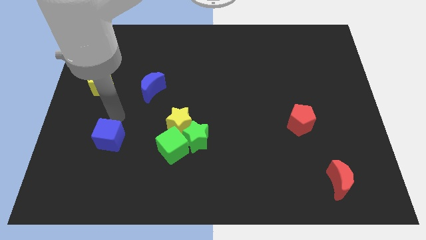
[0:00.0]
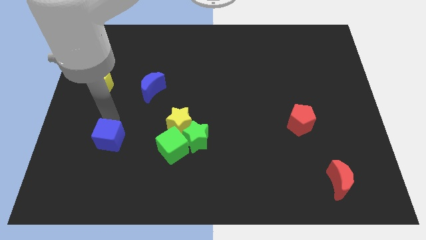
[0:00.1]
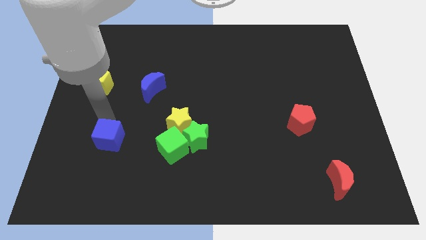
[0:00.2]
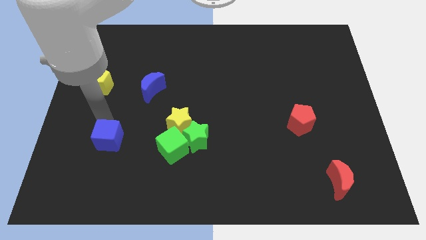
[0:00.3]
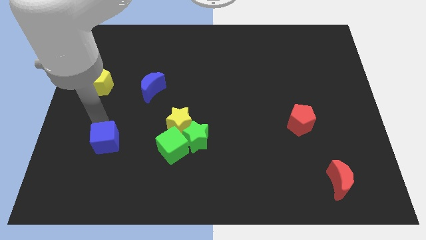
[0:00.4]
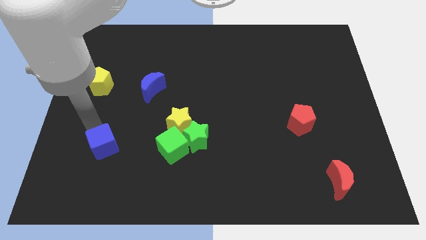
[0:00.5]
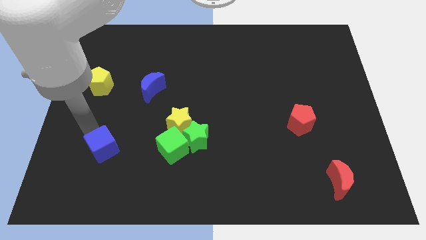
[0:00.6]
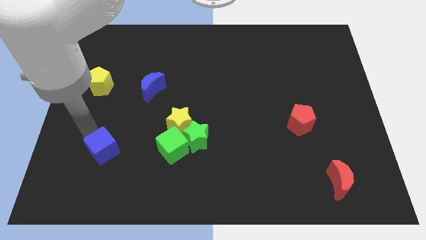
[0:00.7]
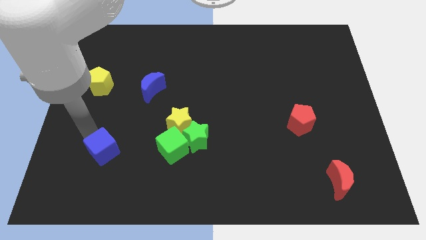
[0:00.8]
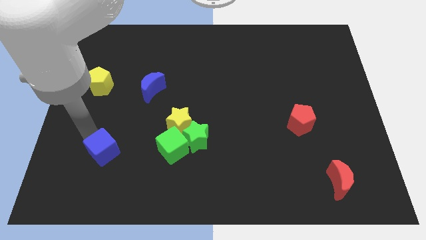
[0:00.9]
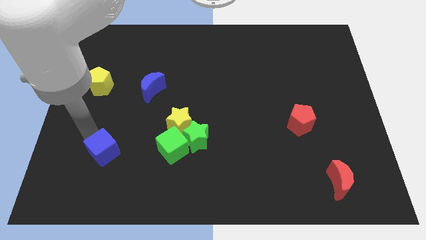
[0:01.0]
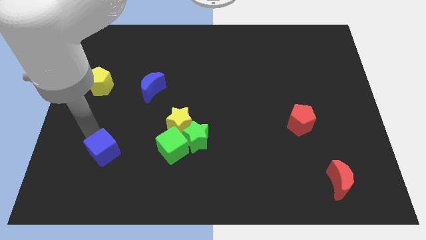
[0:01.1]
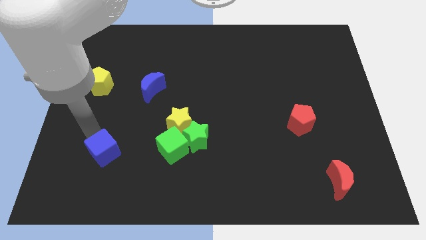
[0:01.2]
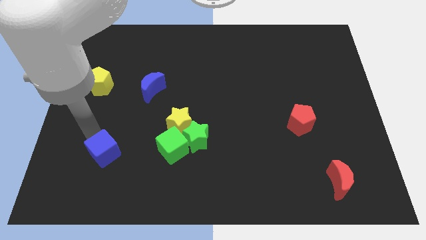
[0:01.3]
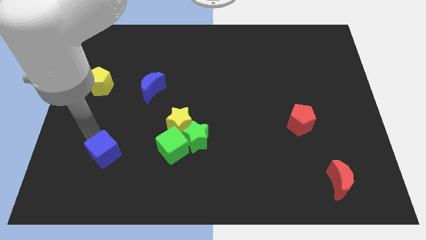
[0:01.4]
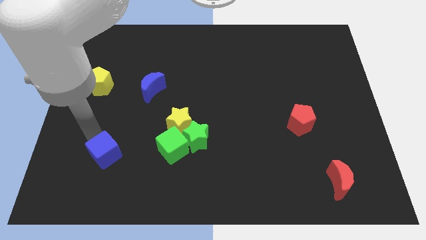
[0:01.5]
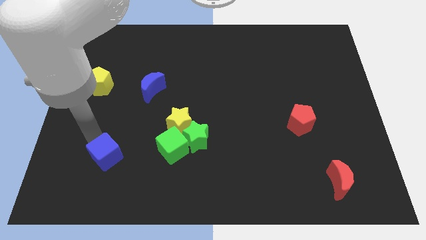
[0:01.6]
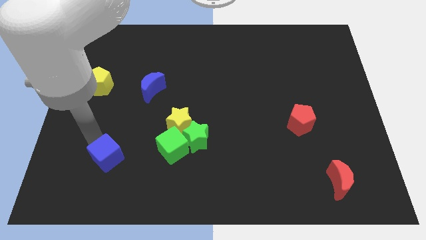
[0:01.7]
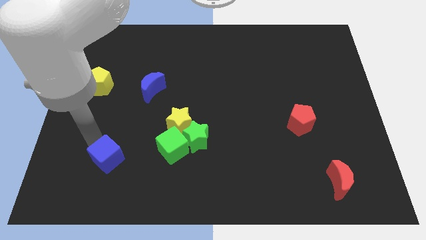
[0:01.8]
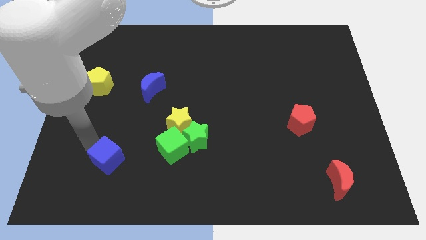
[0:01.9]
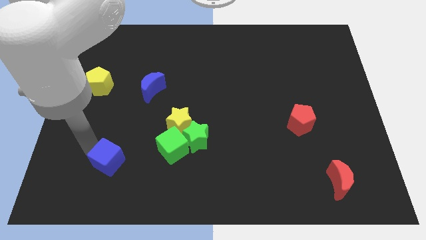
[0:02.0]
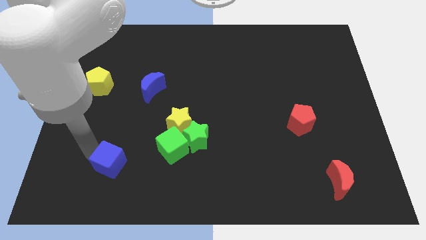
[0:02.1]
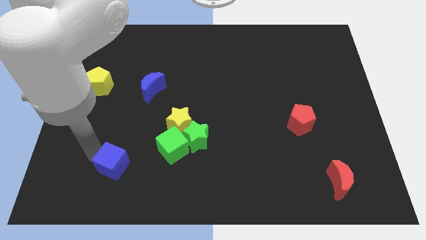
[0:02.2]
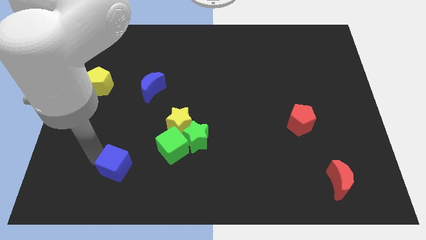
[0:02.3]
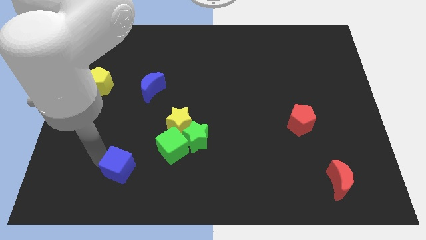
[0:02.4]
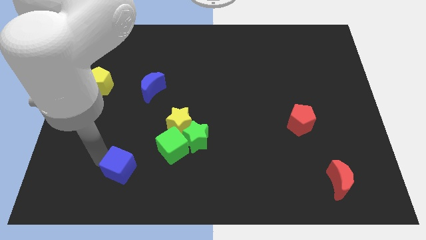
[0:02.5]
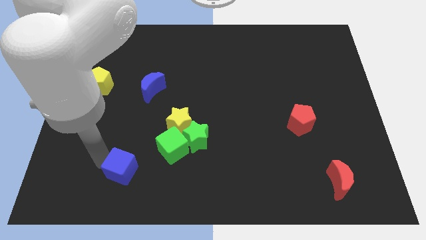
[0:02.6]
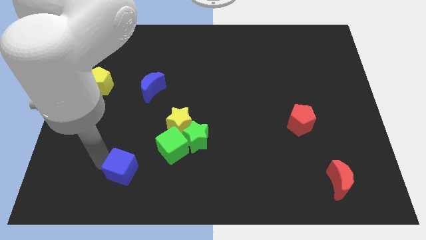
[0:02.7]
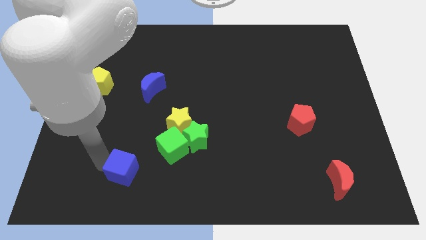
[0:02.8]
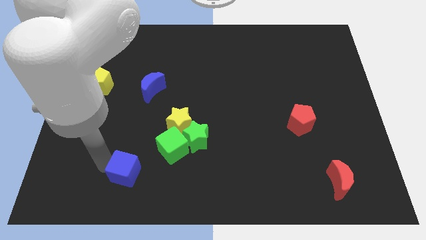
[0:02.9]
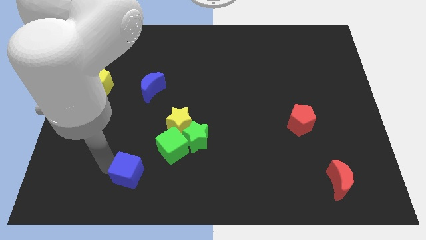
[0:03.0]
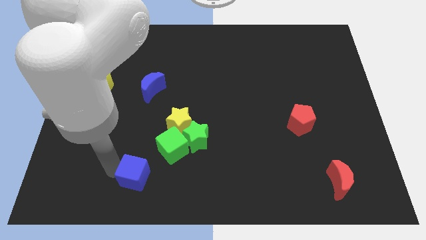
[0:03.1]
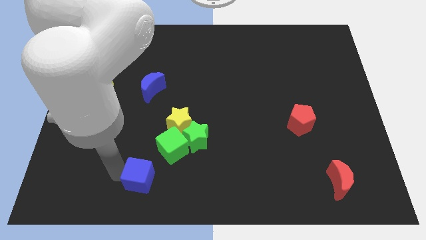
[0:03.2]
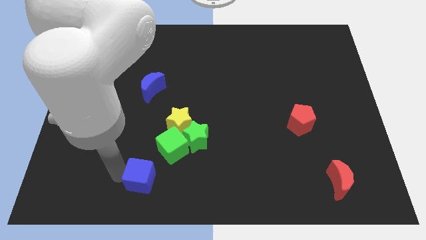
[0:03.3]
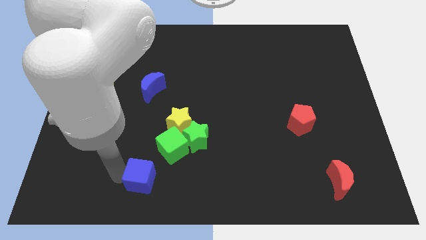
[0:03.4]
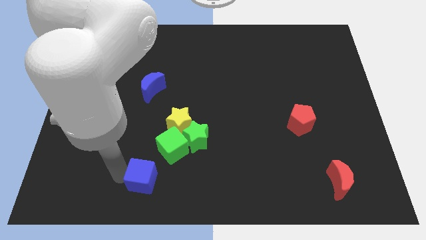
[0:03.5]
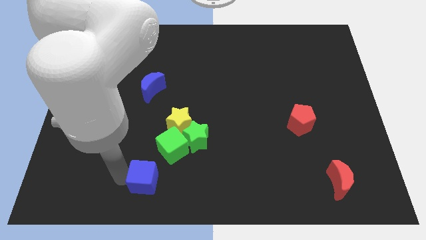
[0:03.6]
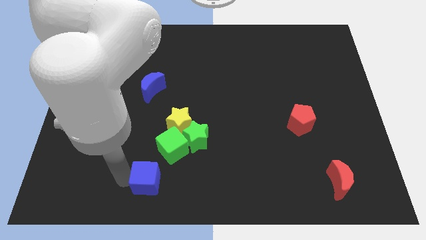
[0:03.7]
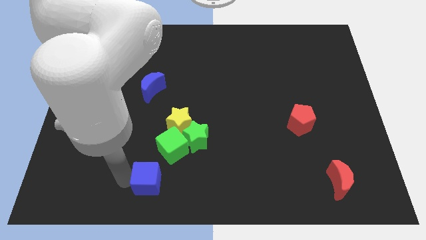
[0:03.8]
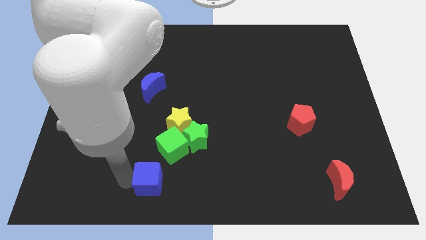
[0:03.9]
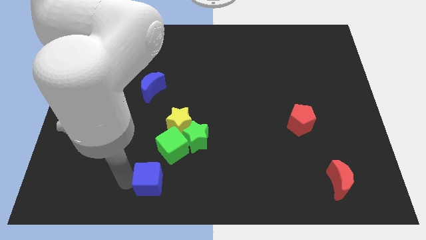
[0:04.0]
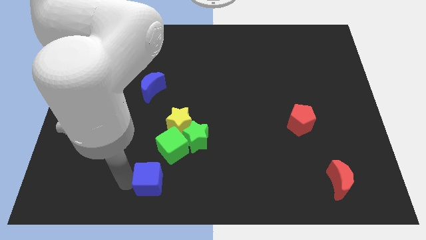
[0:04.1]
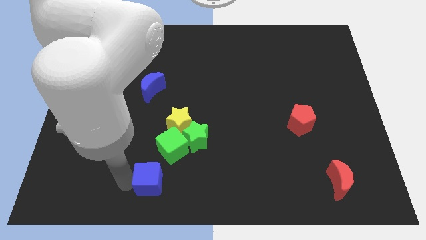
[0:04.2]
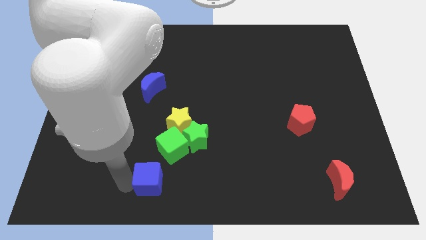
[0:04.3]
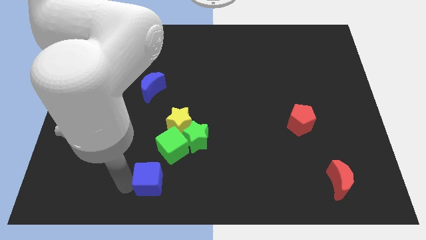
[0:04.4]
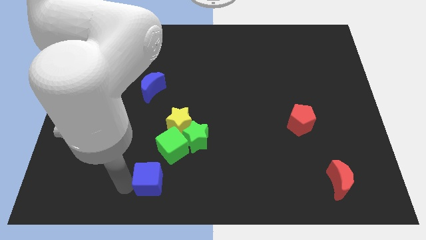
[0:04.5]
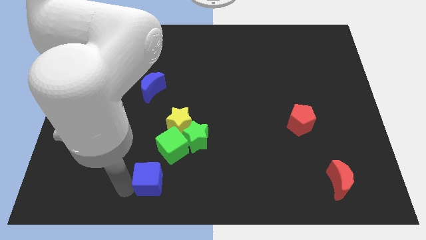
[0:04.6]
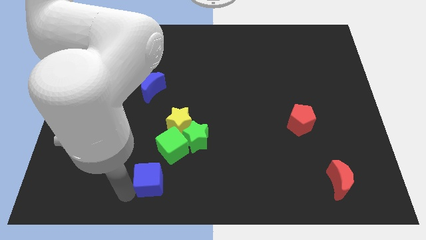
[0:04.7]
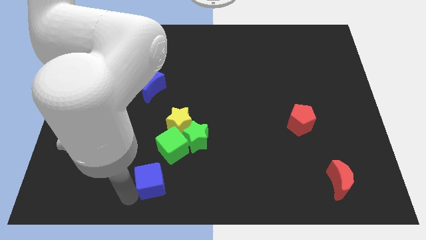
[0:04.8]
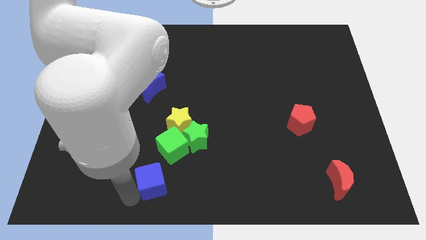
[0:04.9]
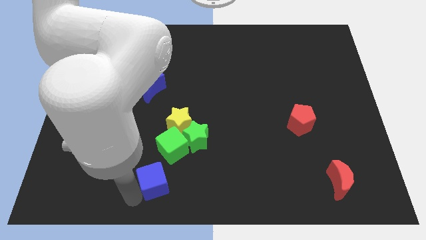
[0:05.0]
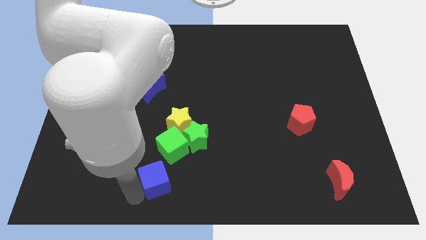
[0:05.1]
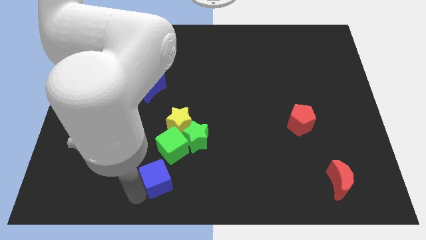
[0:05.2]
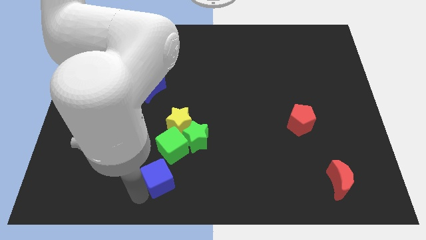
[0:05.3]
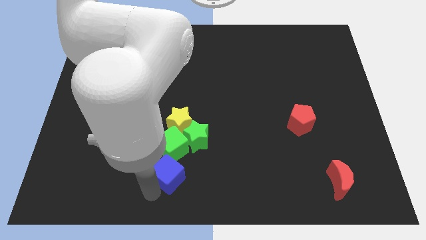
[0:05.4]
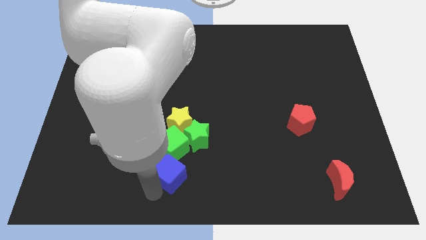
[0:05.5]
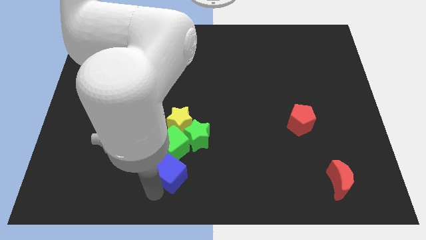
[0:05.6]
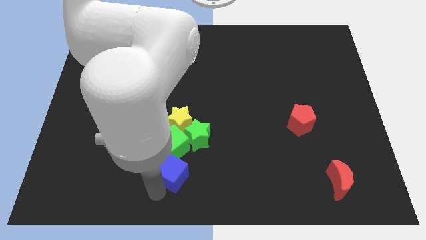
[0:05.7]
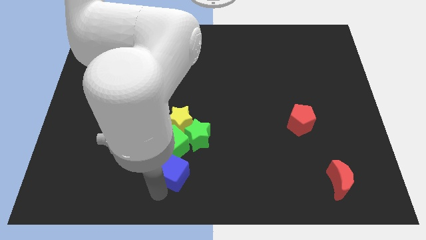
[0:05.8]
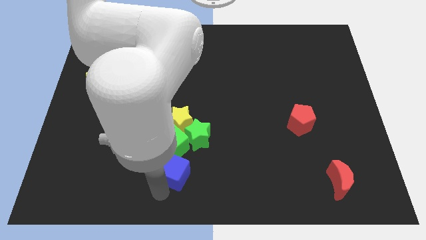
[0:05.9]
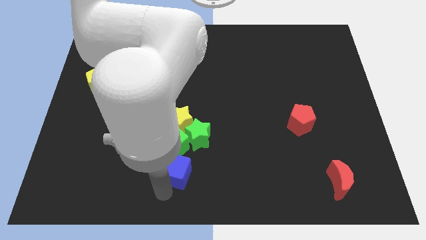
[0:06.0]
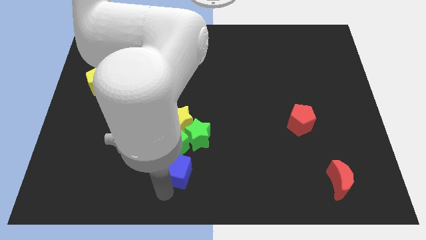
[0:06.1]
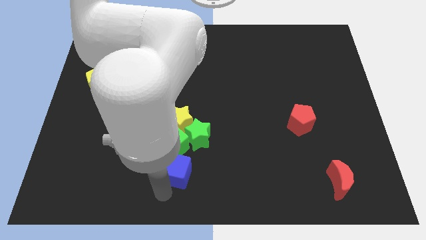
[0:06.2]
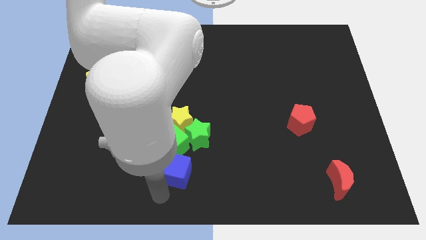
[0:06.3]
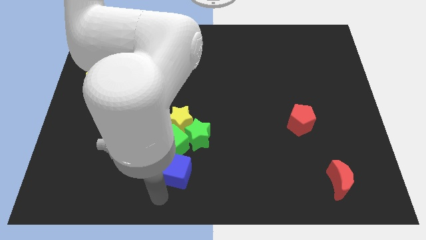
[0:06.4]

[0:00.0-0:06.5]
move the blue cube to the bottom of the green cube

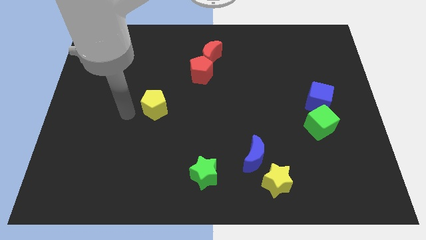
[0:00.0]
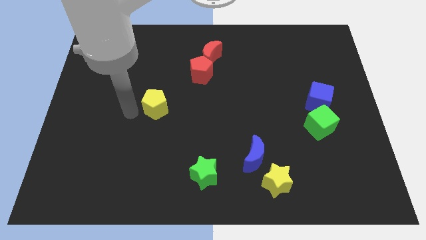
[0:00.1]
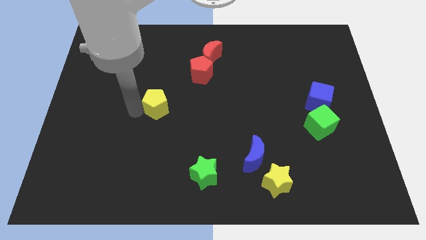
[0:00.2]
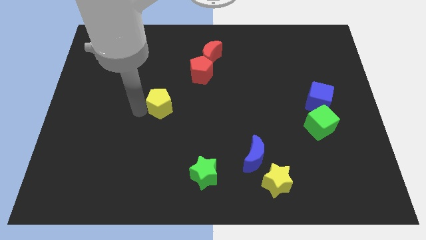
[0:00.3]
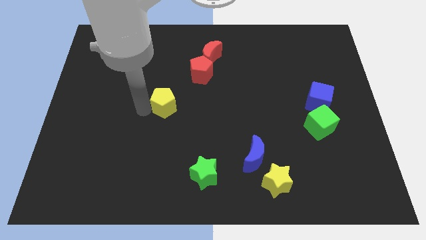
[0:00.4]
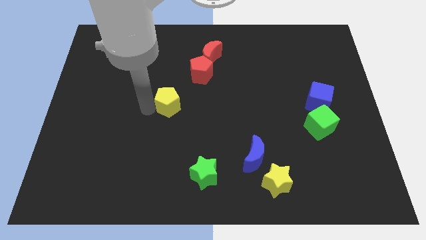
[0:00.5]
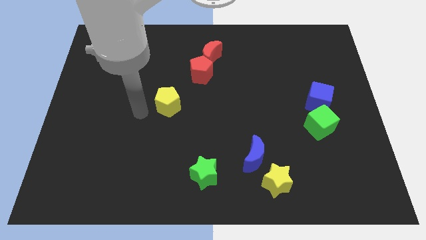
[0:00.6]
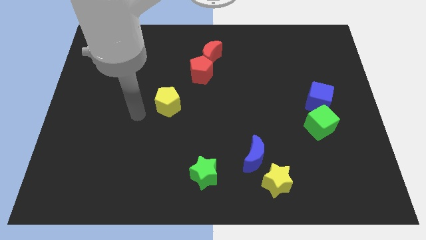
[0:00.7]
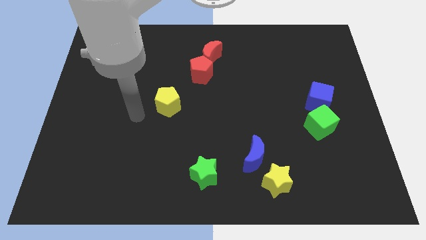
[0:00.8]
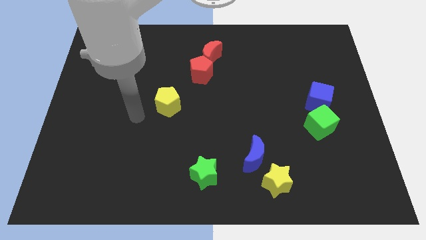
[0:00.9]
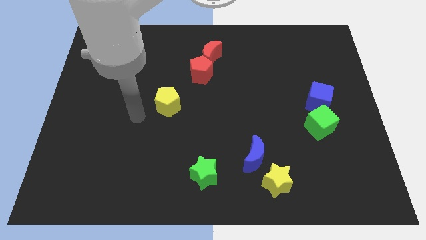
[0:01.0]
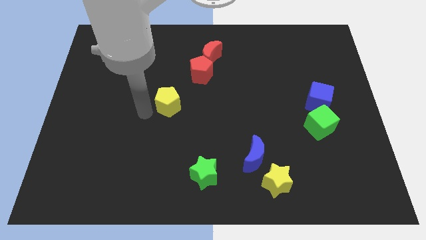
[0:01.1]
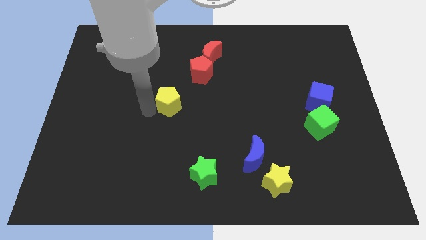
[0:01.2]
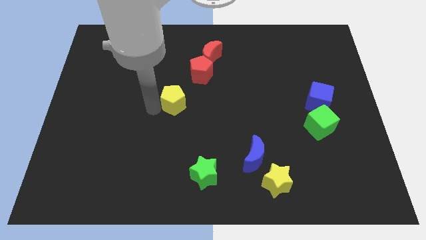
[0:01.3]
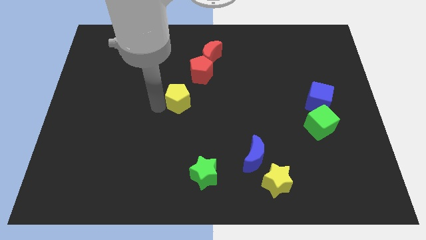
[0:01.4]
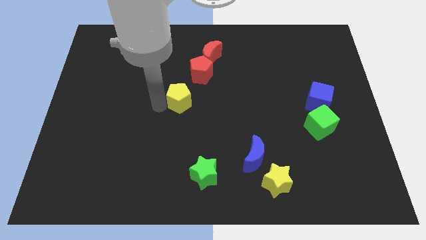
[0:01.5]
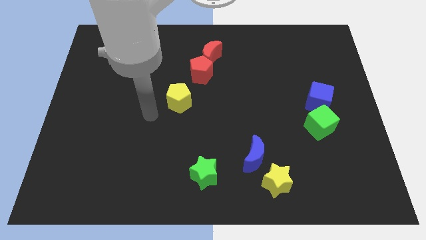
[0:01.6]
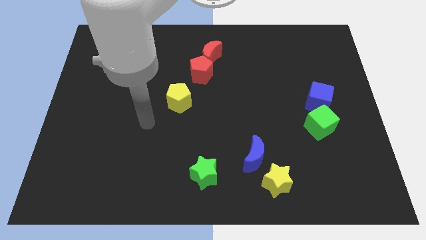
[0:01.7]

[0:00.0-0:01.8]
push the yellow pentagon to the right of the board

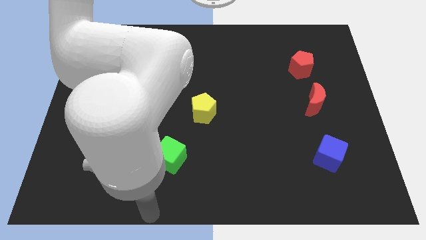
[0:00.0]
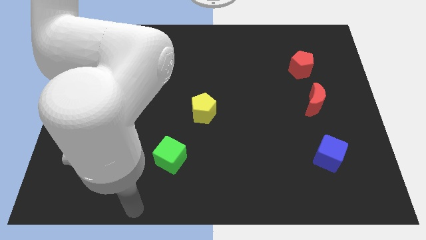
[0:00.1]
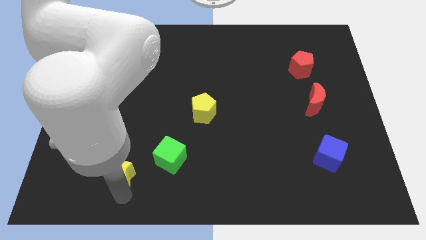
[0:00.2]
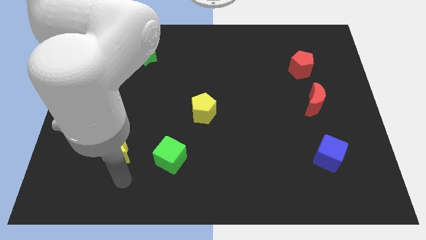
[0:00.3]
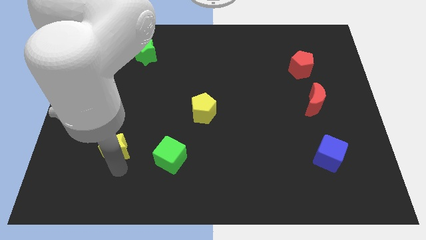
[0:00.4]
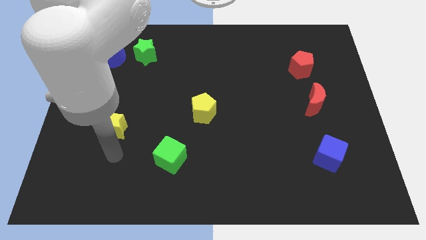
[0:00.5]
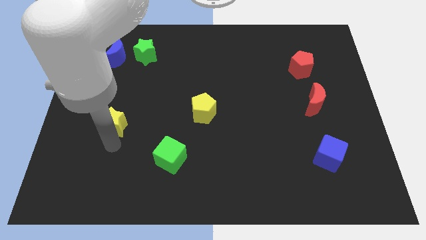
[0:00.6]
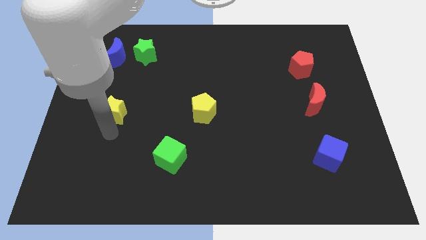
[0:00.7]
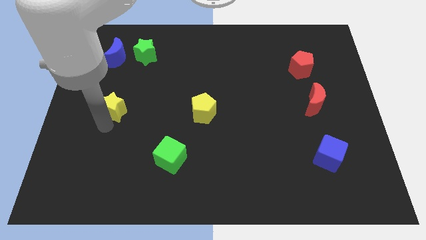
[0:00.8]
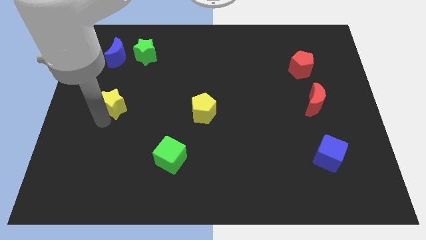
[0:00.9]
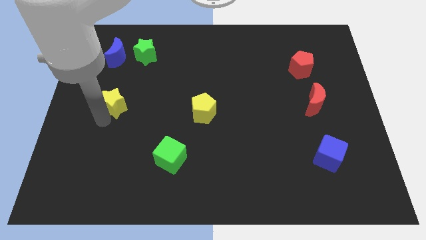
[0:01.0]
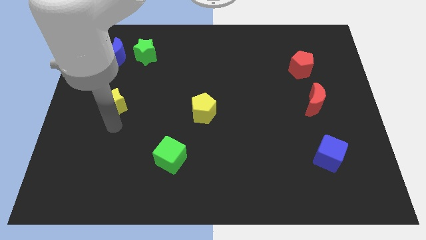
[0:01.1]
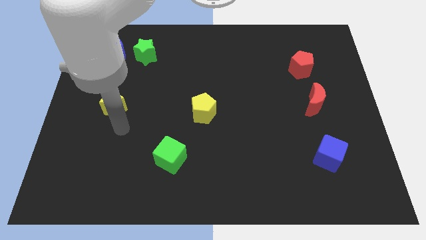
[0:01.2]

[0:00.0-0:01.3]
move the yellow star to the horizontal left of the yellow pentagon
